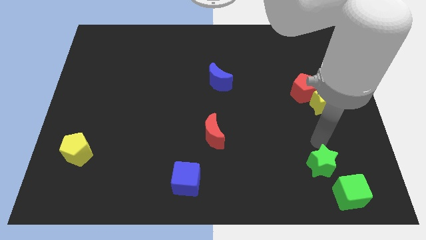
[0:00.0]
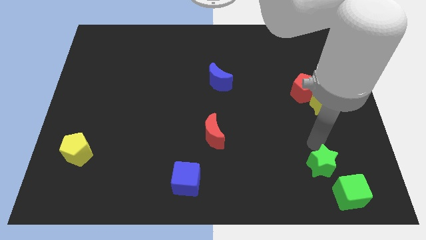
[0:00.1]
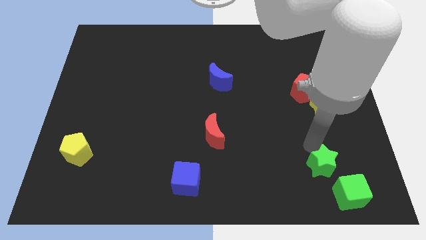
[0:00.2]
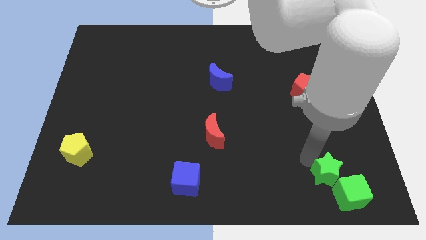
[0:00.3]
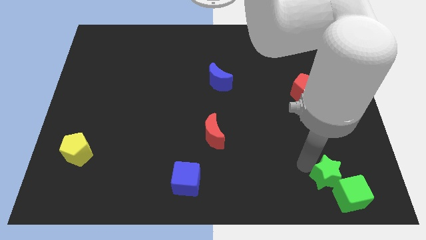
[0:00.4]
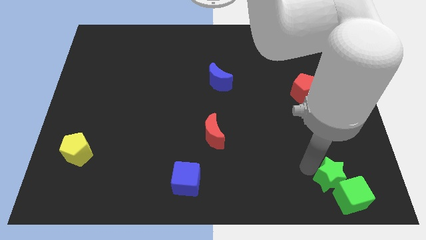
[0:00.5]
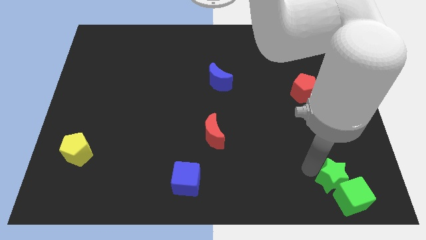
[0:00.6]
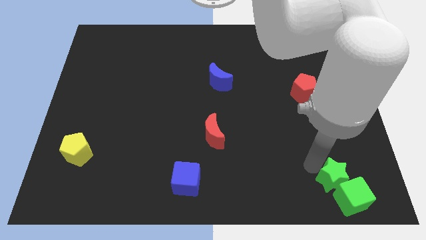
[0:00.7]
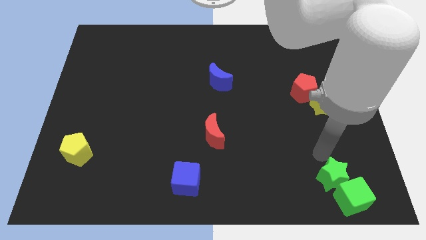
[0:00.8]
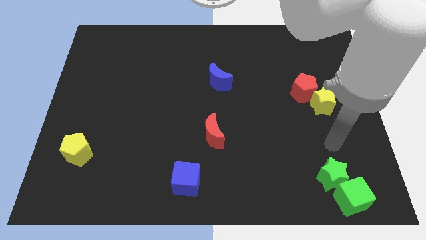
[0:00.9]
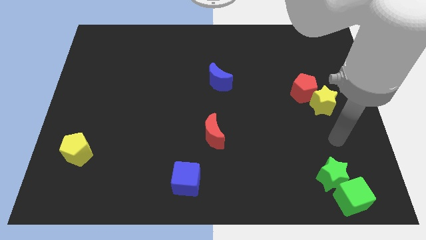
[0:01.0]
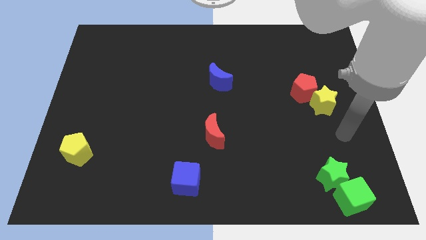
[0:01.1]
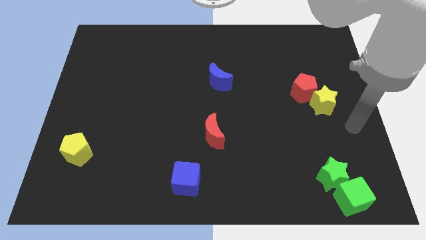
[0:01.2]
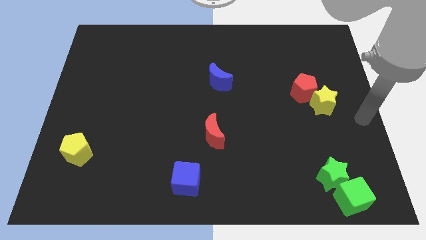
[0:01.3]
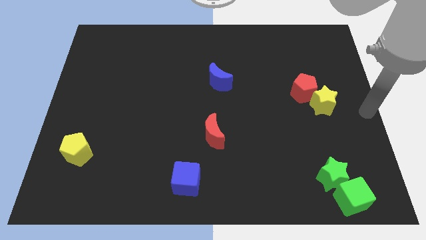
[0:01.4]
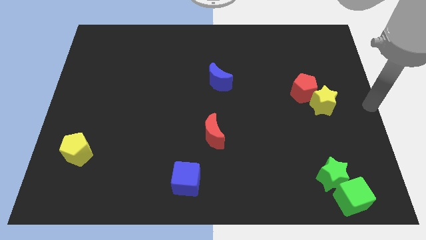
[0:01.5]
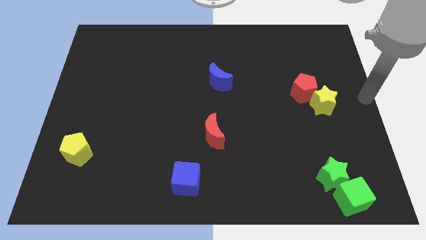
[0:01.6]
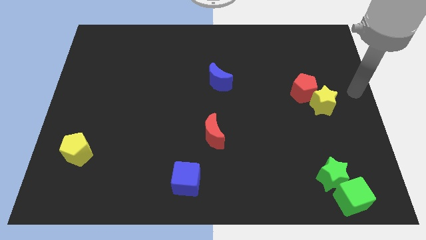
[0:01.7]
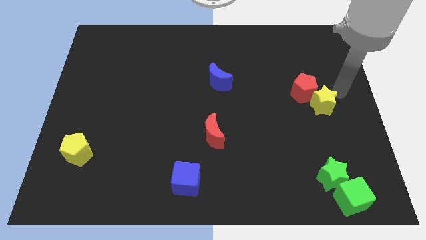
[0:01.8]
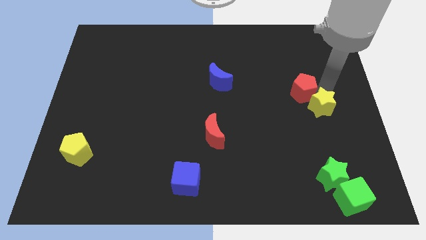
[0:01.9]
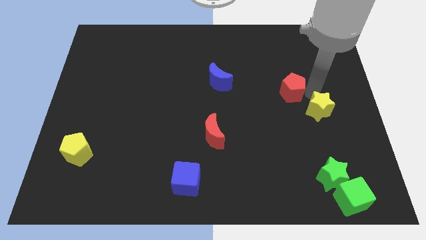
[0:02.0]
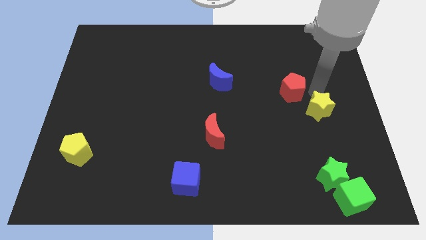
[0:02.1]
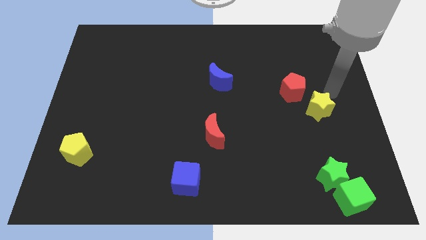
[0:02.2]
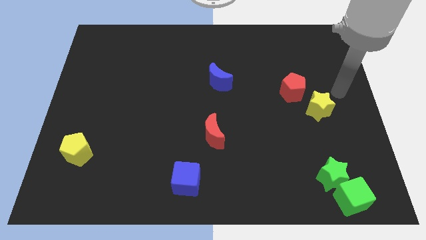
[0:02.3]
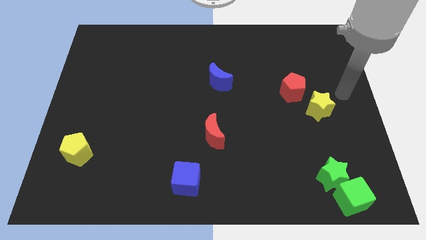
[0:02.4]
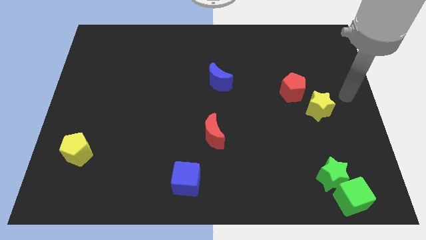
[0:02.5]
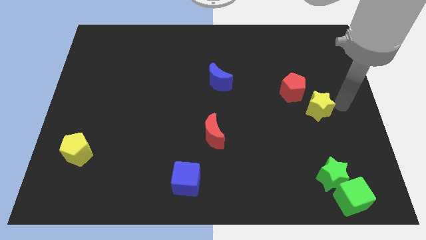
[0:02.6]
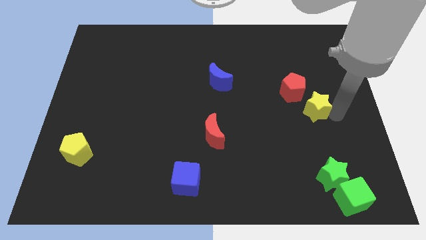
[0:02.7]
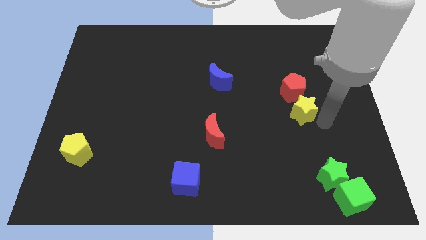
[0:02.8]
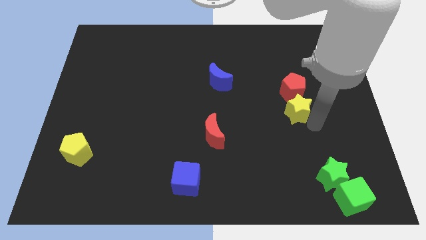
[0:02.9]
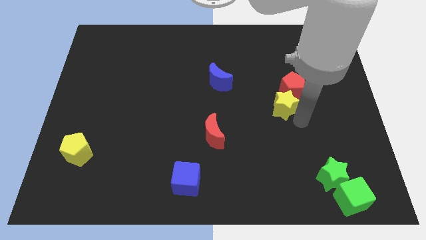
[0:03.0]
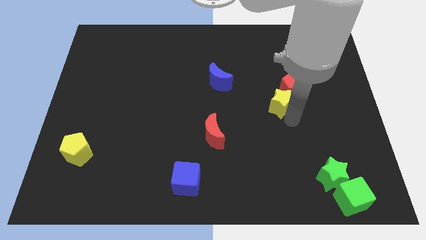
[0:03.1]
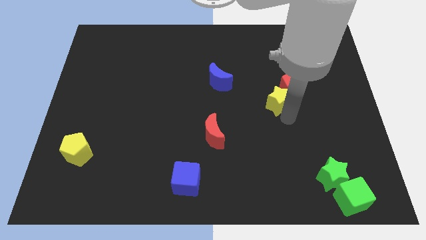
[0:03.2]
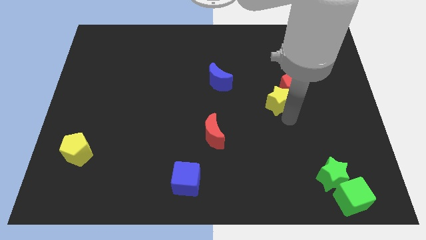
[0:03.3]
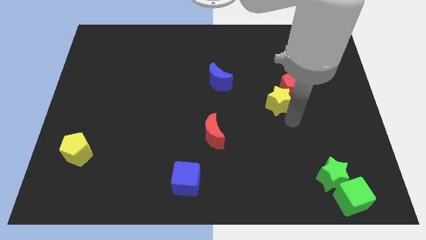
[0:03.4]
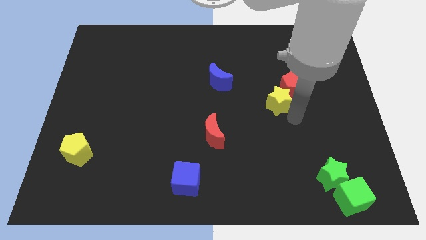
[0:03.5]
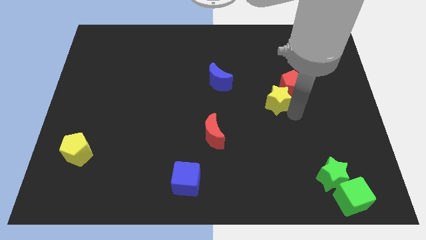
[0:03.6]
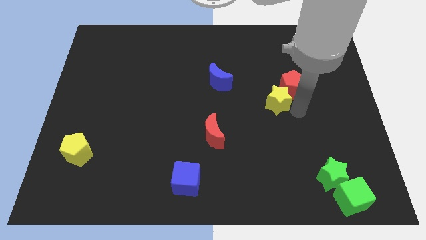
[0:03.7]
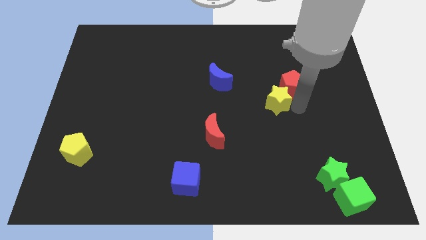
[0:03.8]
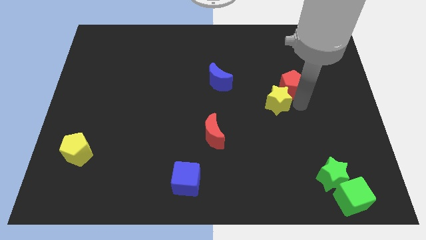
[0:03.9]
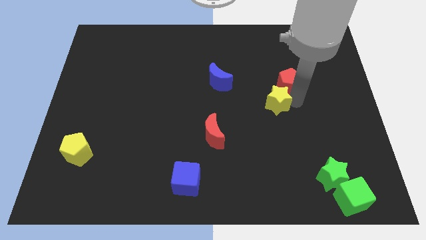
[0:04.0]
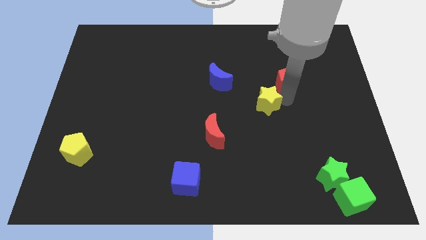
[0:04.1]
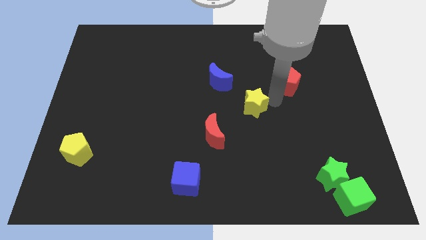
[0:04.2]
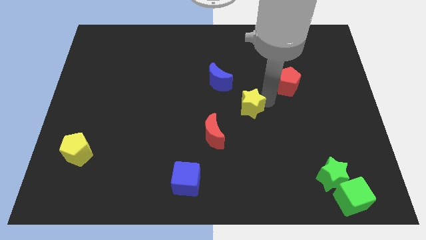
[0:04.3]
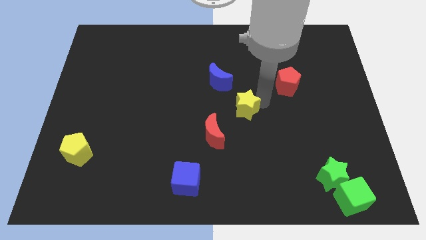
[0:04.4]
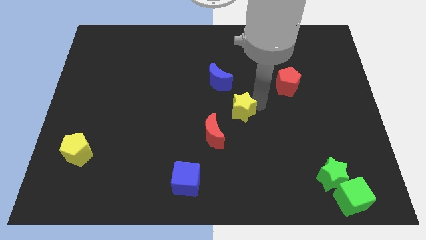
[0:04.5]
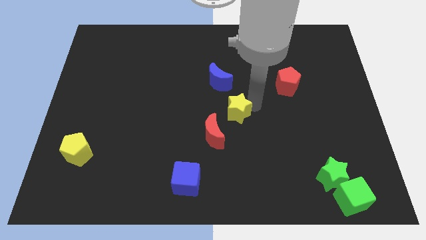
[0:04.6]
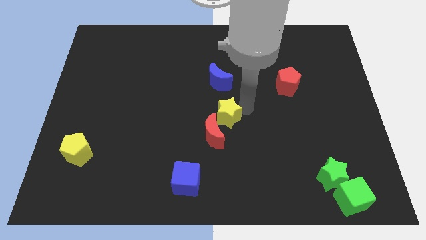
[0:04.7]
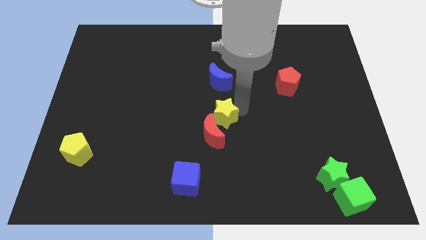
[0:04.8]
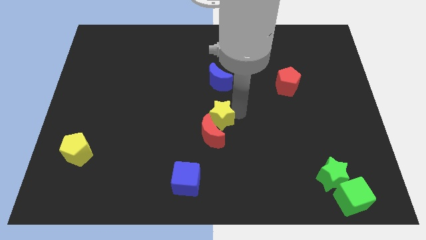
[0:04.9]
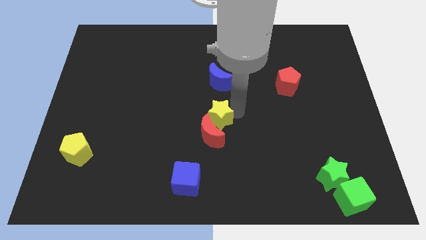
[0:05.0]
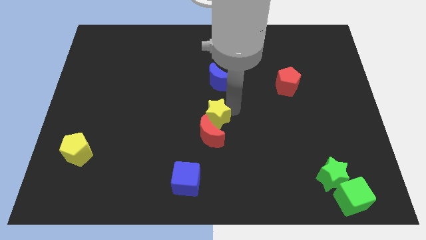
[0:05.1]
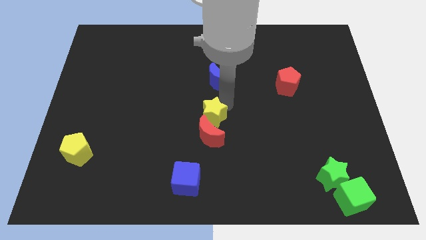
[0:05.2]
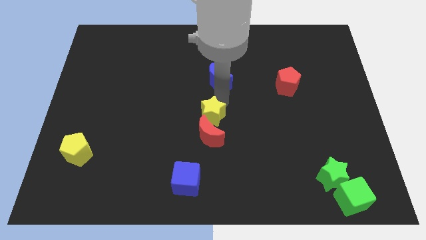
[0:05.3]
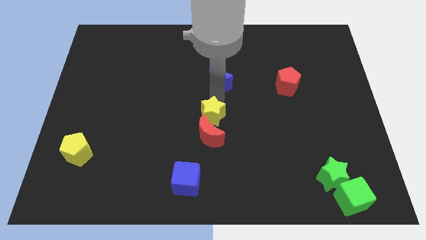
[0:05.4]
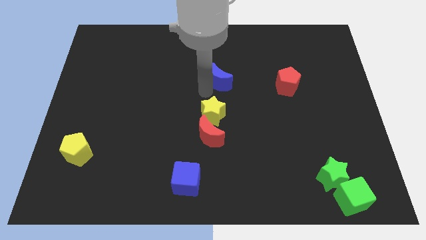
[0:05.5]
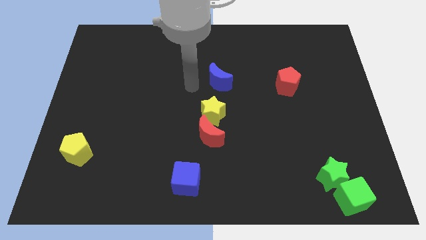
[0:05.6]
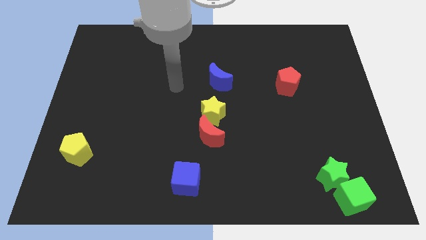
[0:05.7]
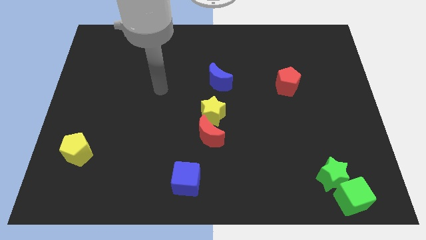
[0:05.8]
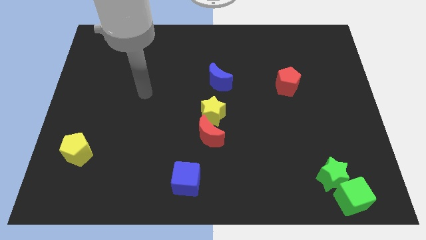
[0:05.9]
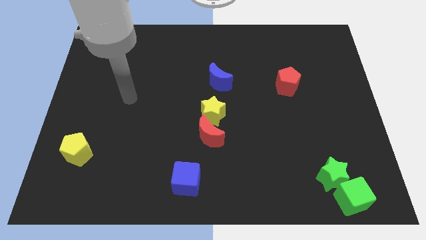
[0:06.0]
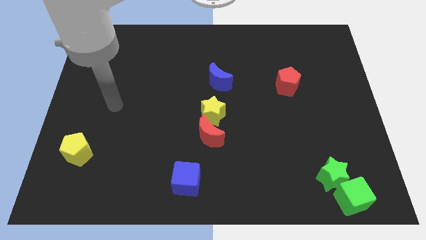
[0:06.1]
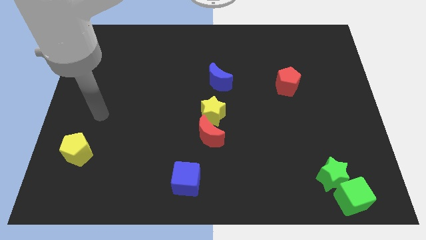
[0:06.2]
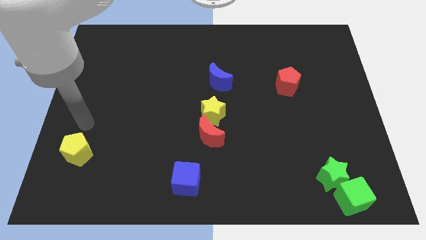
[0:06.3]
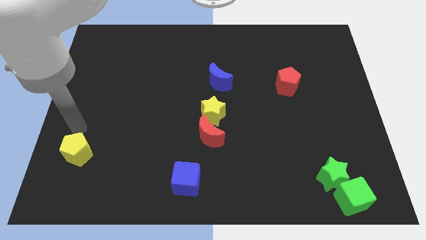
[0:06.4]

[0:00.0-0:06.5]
move the yellow star to top of the red crescent

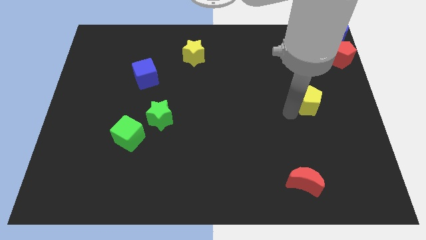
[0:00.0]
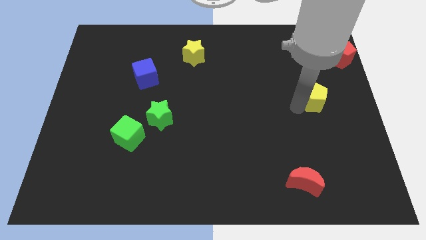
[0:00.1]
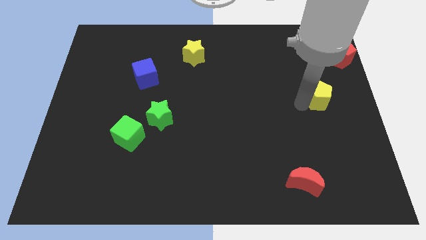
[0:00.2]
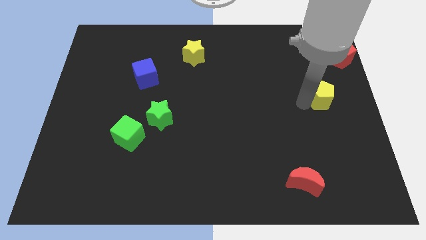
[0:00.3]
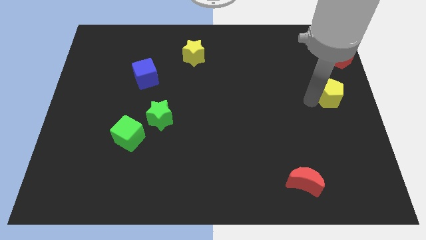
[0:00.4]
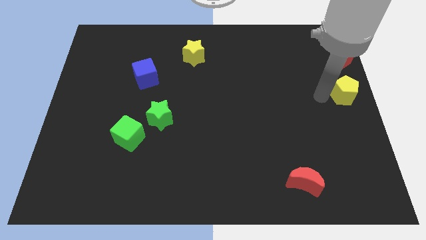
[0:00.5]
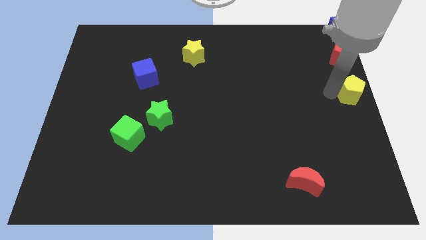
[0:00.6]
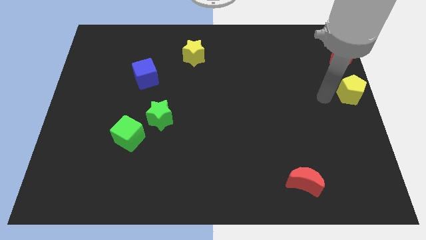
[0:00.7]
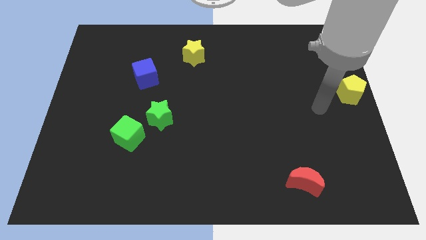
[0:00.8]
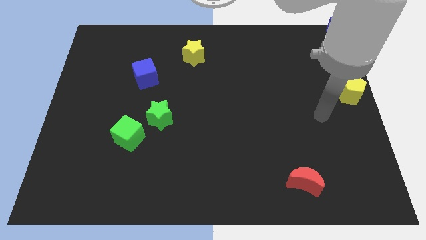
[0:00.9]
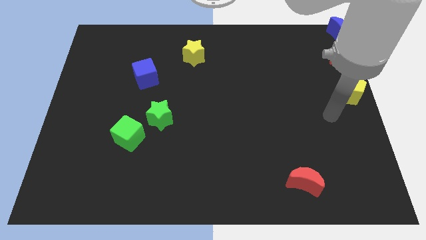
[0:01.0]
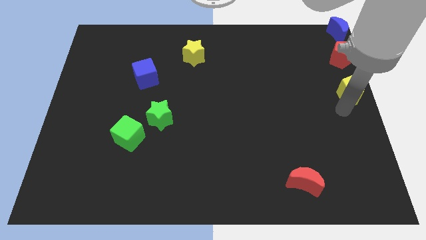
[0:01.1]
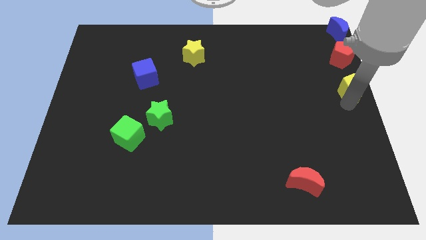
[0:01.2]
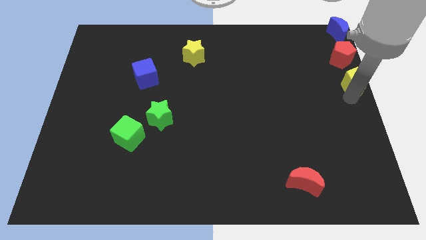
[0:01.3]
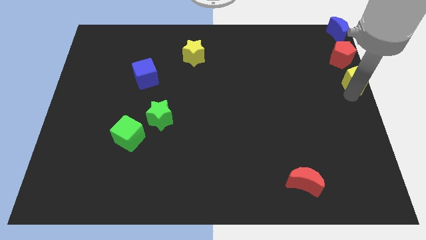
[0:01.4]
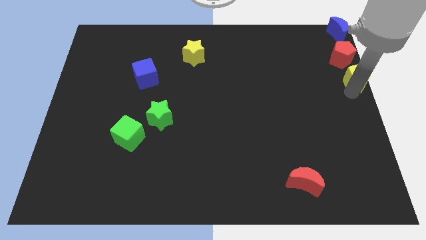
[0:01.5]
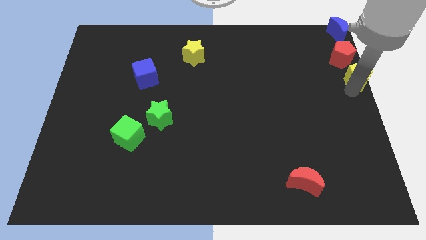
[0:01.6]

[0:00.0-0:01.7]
place the yellow pentagon below the red pentagon

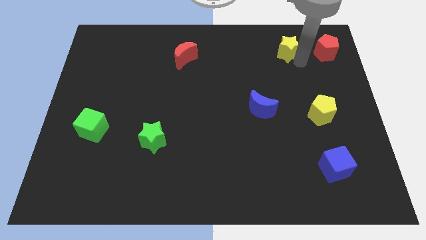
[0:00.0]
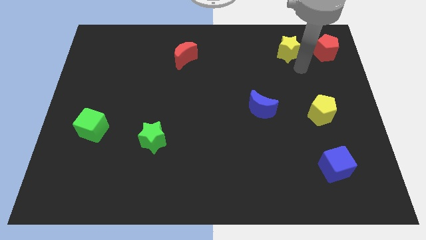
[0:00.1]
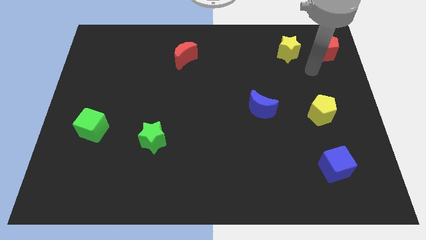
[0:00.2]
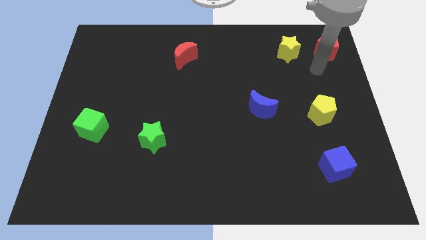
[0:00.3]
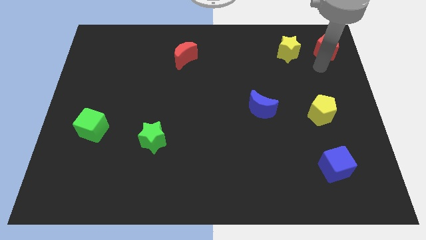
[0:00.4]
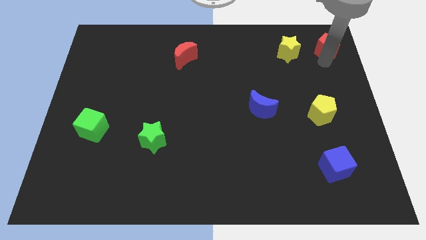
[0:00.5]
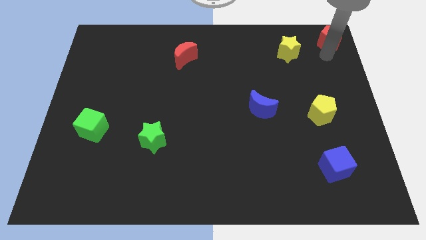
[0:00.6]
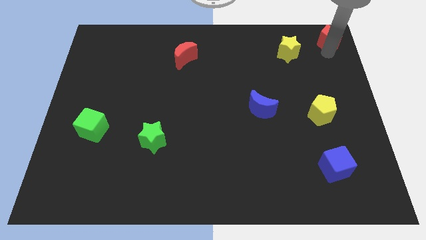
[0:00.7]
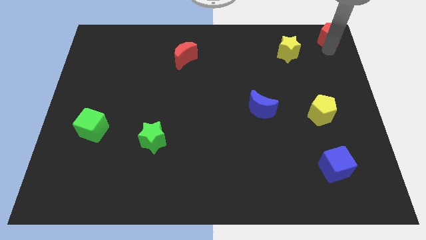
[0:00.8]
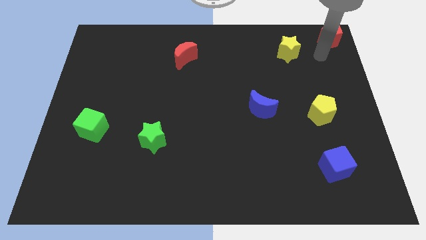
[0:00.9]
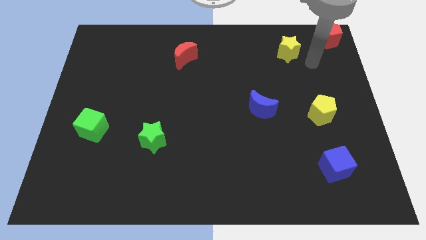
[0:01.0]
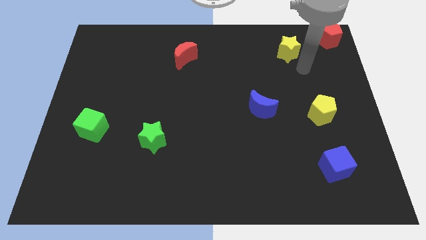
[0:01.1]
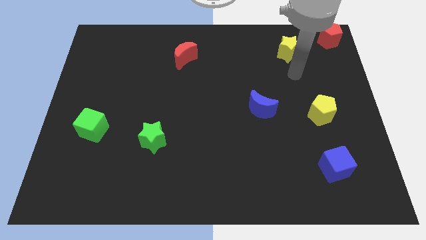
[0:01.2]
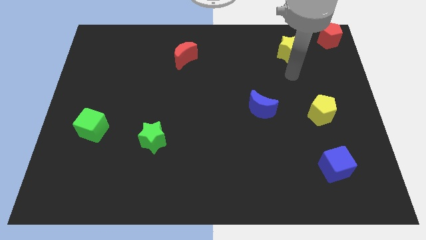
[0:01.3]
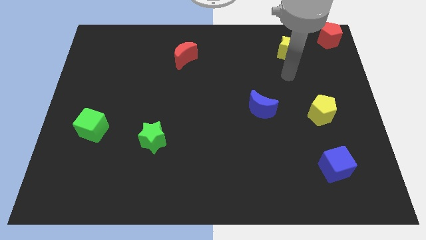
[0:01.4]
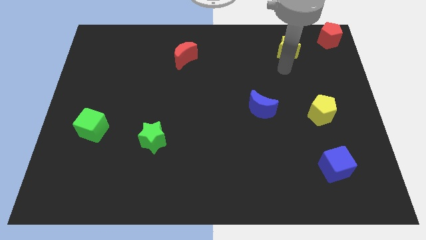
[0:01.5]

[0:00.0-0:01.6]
place the red pentagon at the top right corner
